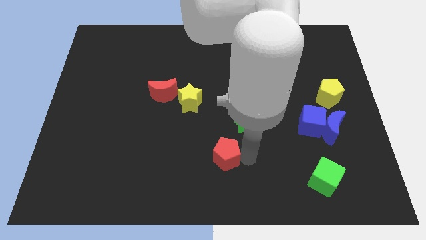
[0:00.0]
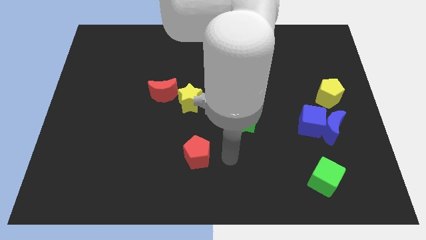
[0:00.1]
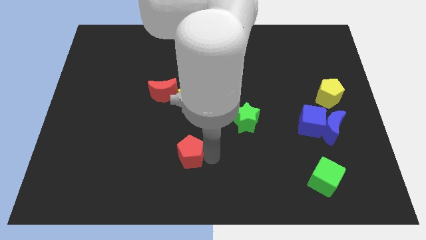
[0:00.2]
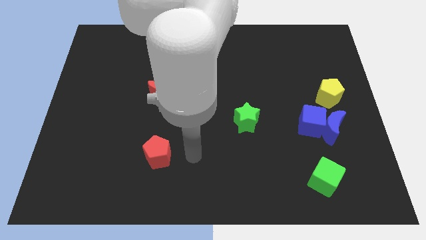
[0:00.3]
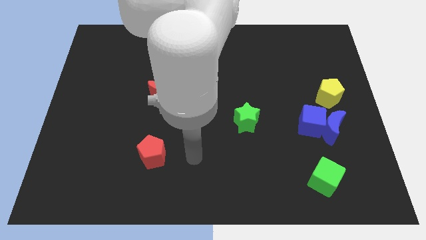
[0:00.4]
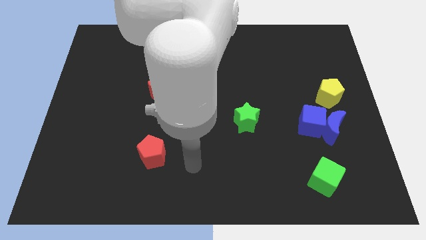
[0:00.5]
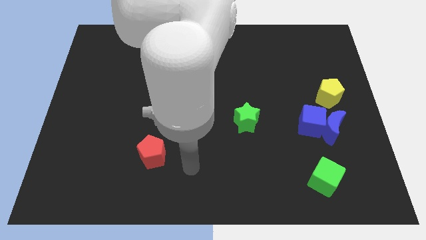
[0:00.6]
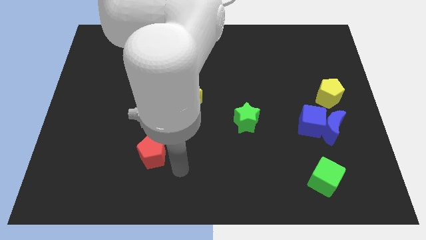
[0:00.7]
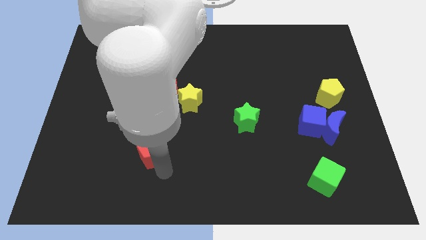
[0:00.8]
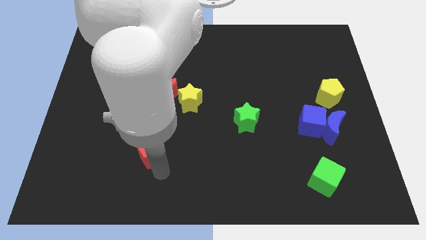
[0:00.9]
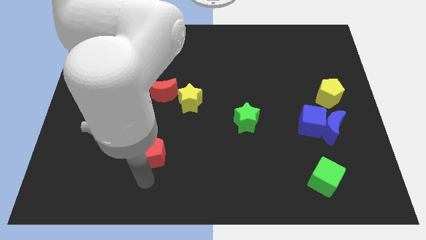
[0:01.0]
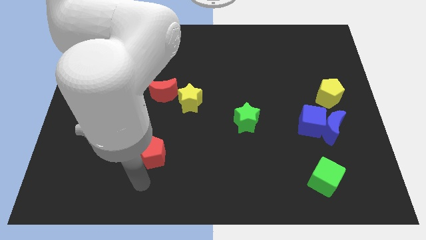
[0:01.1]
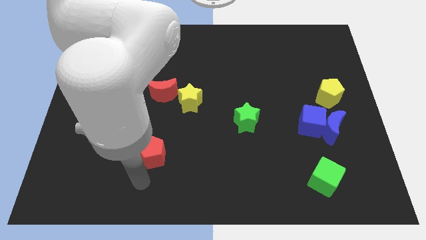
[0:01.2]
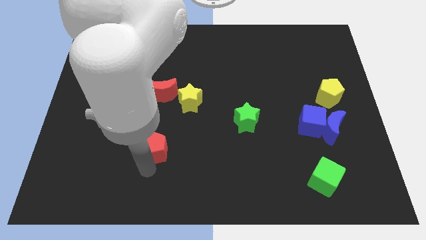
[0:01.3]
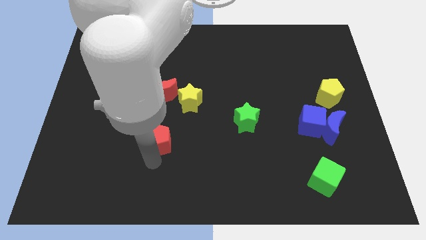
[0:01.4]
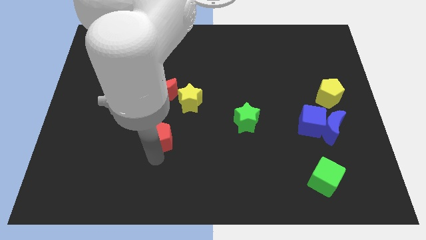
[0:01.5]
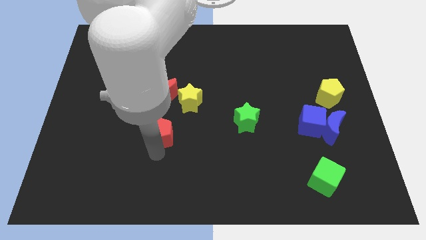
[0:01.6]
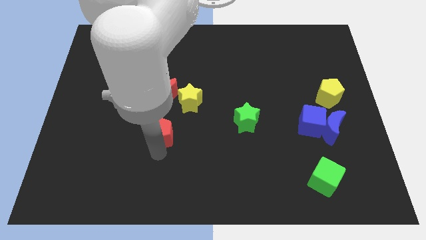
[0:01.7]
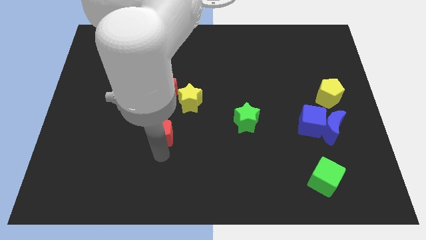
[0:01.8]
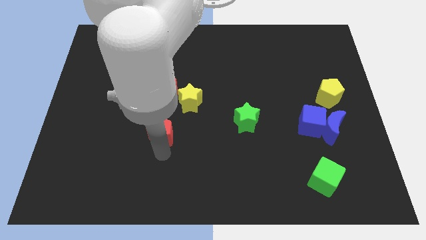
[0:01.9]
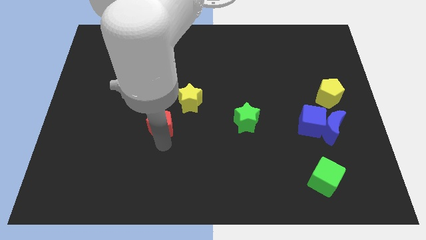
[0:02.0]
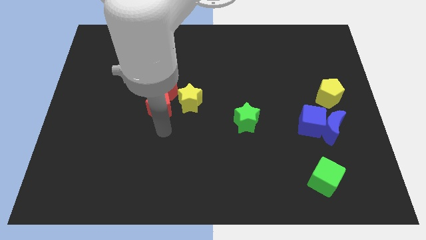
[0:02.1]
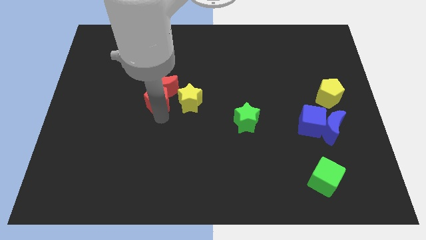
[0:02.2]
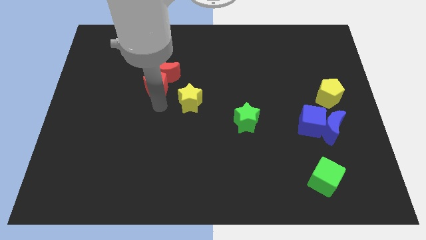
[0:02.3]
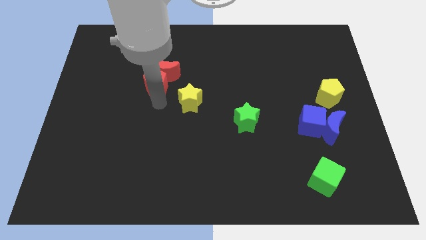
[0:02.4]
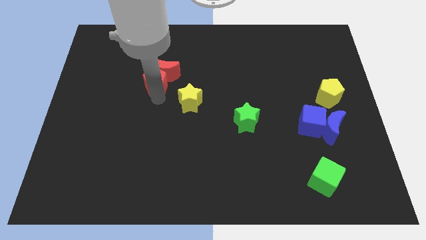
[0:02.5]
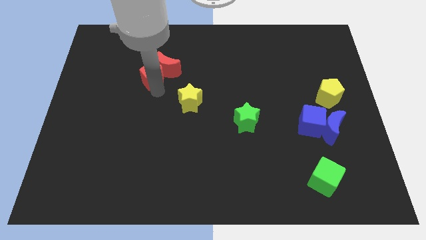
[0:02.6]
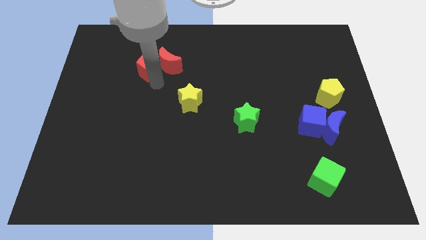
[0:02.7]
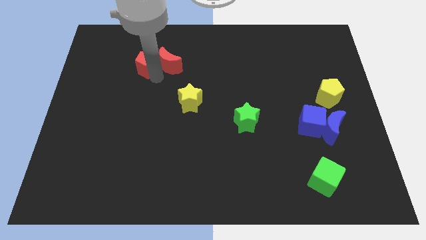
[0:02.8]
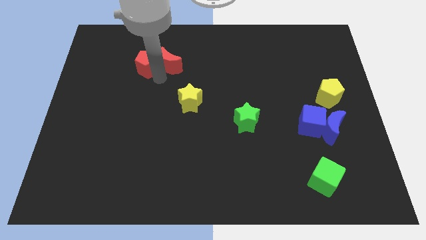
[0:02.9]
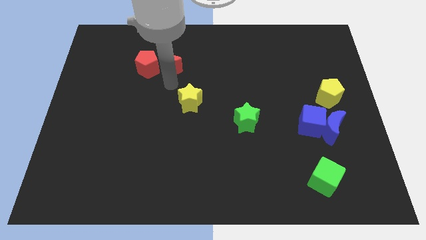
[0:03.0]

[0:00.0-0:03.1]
push the red crescent along the red pentagon towards the top of the board

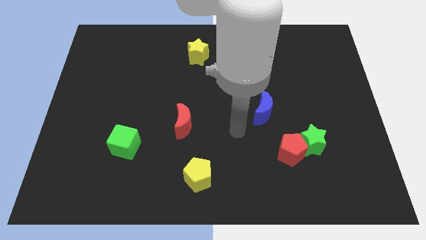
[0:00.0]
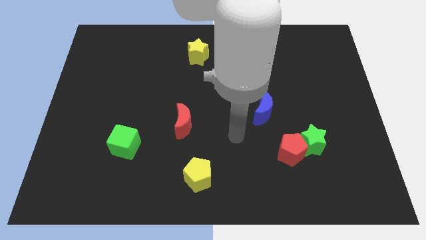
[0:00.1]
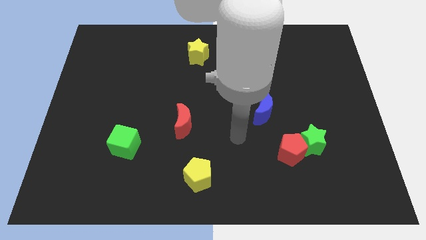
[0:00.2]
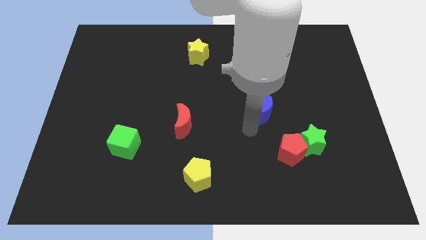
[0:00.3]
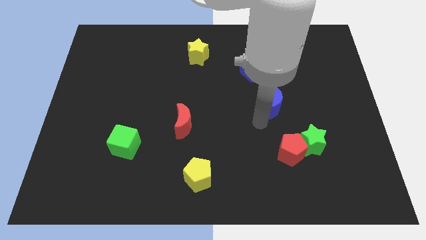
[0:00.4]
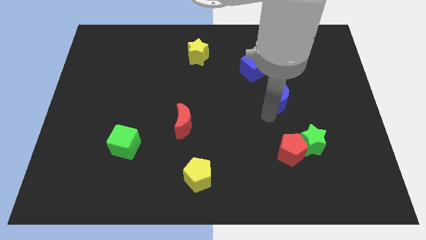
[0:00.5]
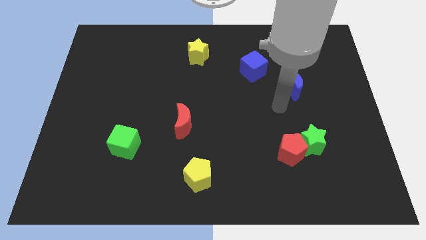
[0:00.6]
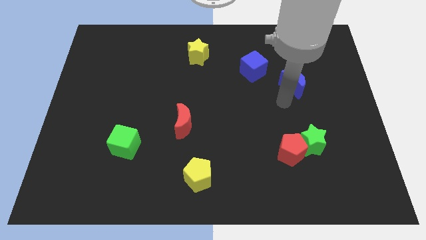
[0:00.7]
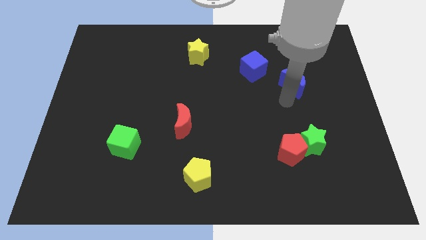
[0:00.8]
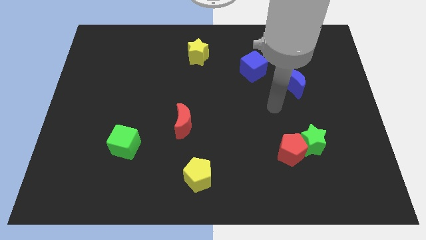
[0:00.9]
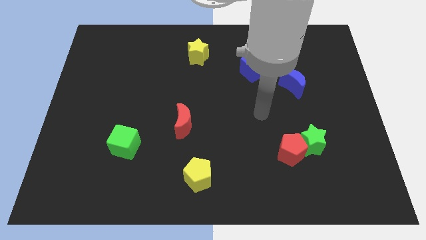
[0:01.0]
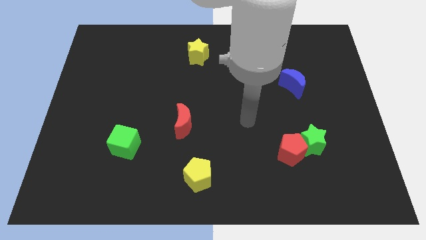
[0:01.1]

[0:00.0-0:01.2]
place the blue moon right to the green star

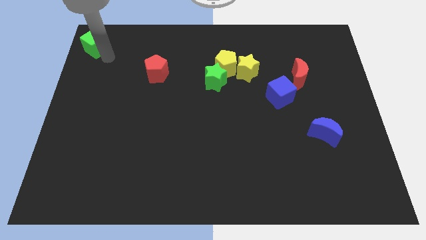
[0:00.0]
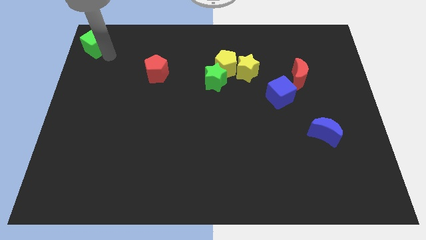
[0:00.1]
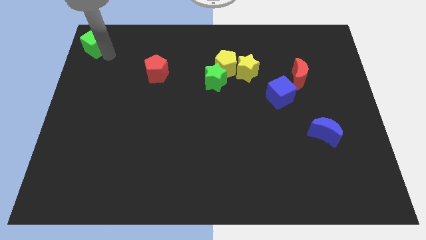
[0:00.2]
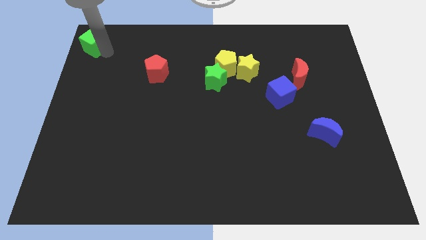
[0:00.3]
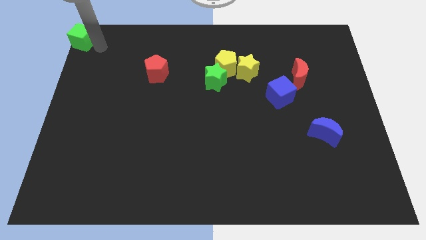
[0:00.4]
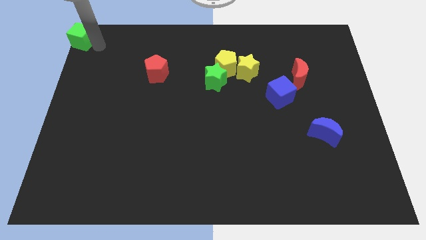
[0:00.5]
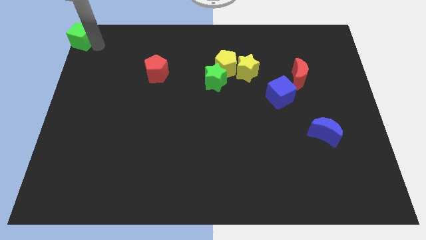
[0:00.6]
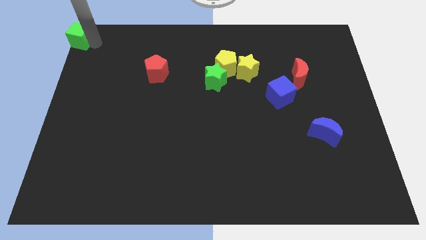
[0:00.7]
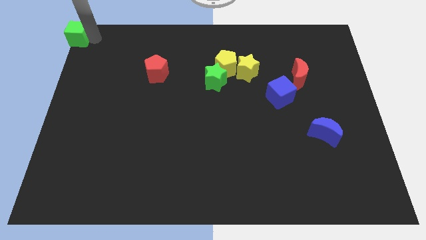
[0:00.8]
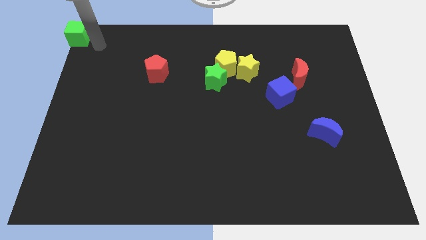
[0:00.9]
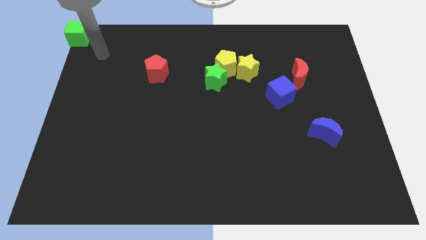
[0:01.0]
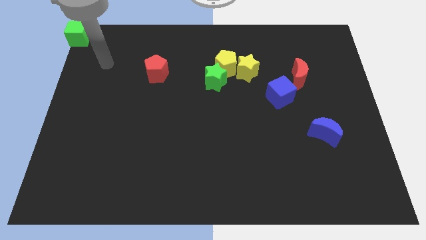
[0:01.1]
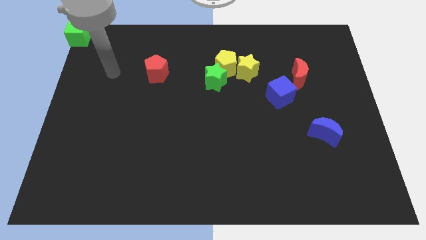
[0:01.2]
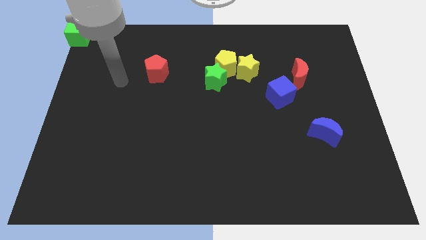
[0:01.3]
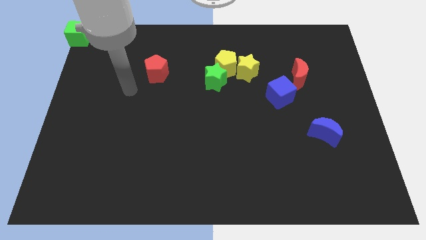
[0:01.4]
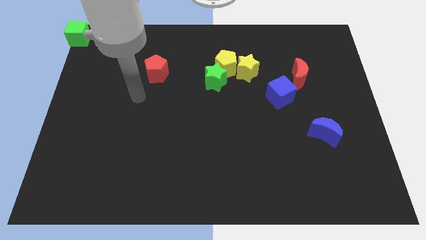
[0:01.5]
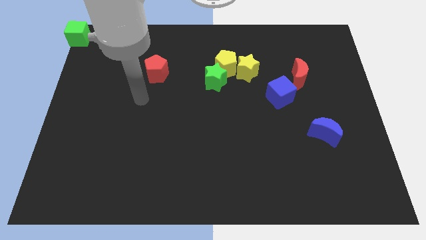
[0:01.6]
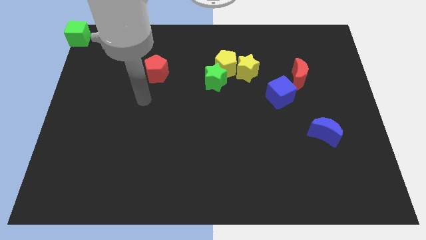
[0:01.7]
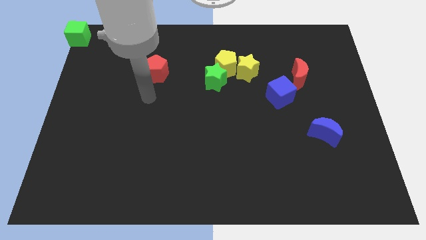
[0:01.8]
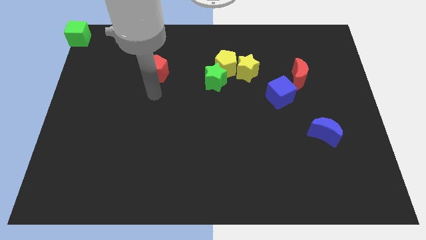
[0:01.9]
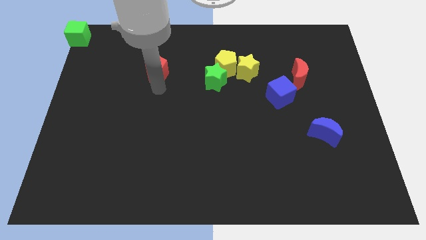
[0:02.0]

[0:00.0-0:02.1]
move your arm to the bottom of the red pentagon

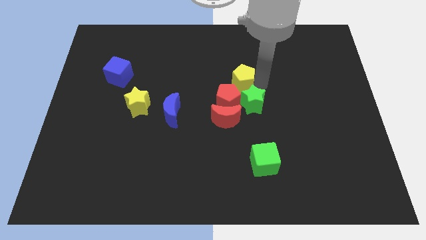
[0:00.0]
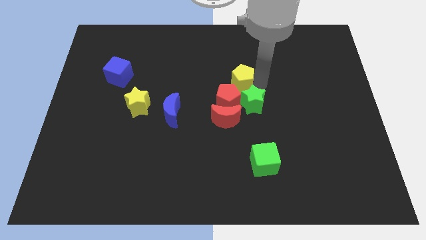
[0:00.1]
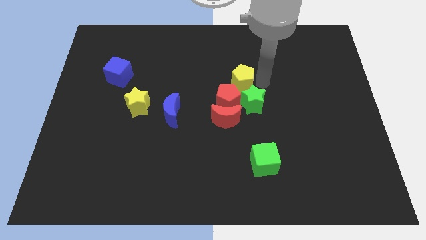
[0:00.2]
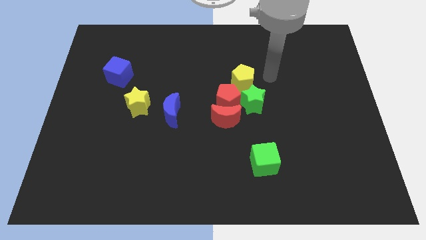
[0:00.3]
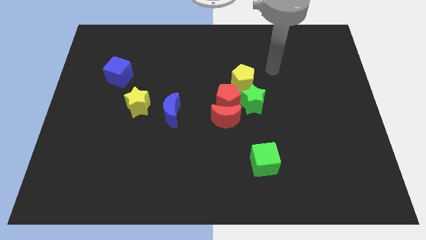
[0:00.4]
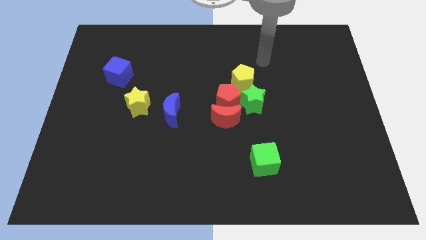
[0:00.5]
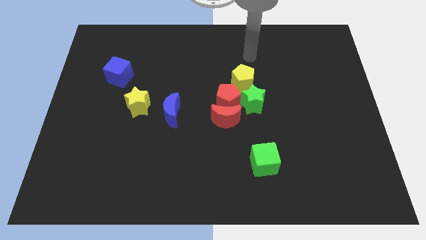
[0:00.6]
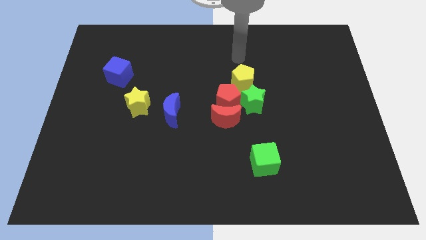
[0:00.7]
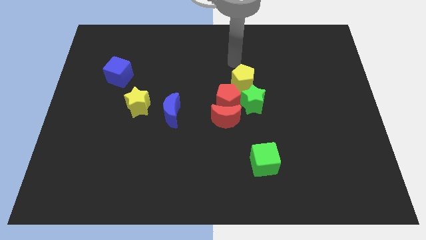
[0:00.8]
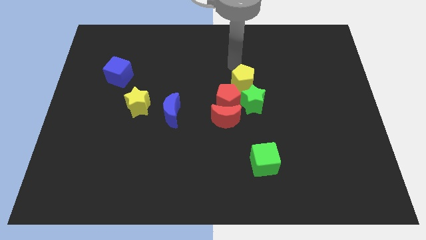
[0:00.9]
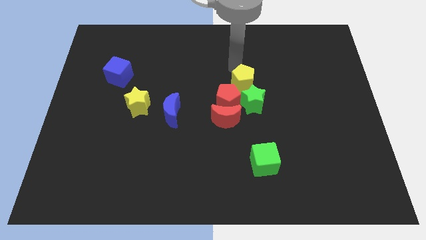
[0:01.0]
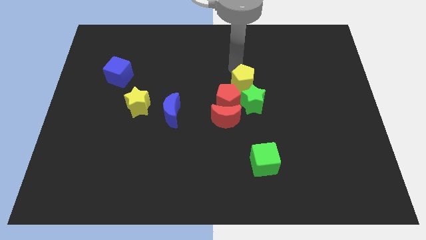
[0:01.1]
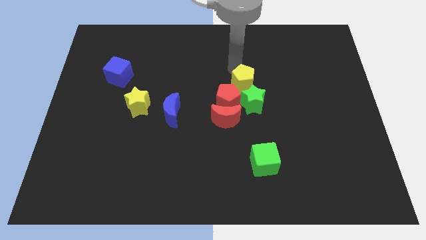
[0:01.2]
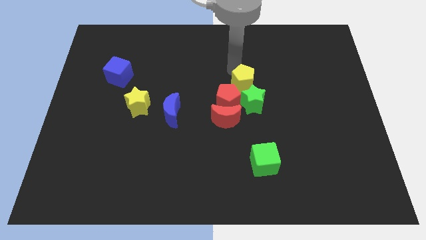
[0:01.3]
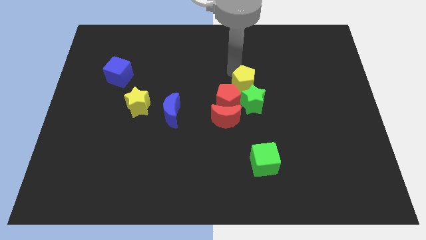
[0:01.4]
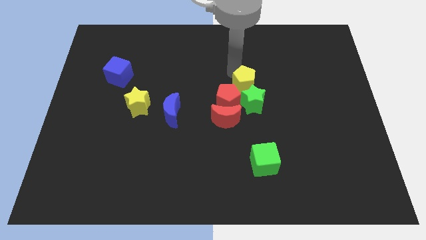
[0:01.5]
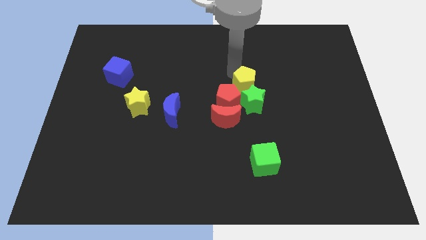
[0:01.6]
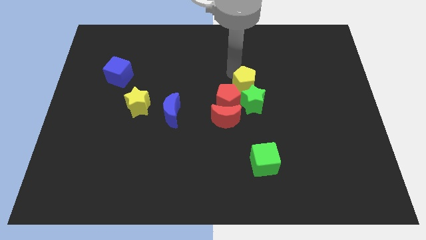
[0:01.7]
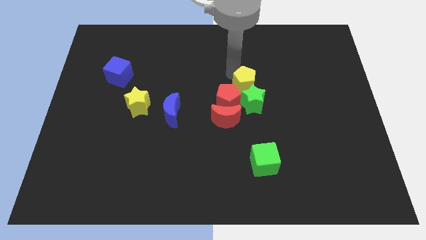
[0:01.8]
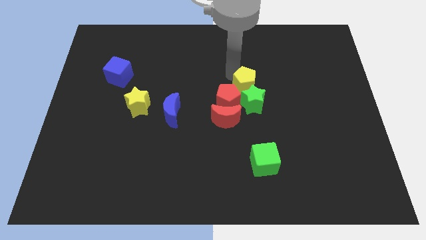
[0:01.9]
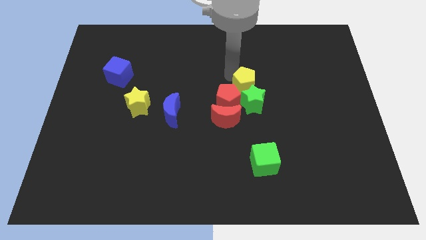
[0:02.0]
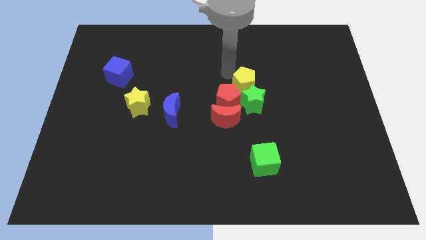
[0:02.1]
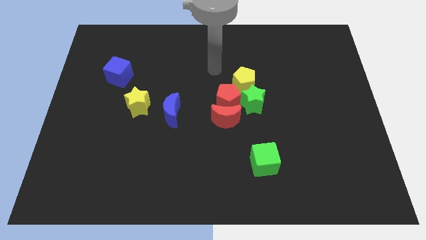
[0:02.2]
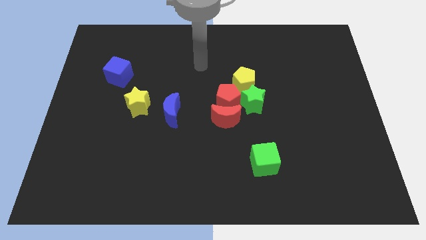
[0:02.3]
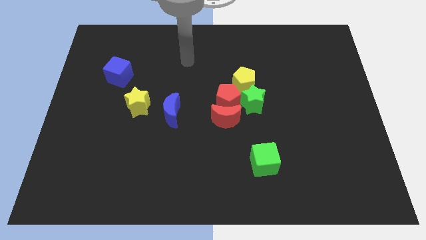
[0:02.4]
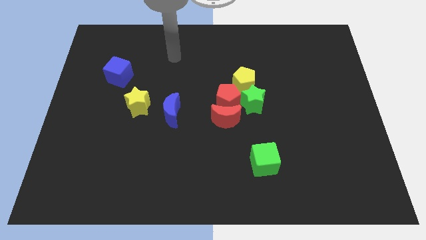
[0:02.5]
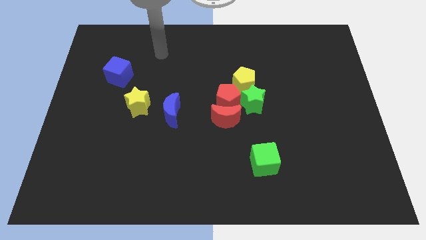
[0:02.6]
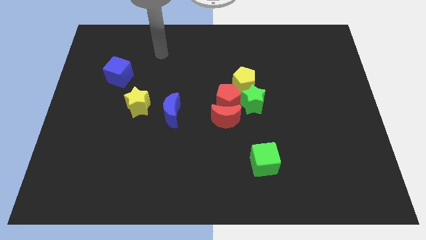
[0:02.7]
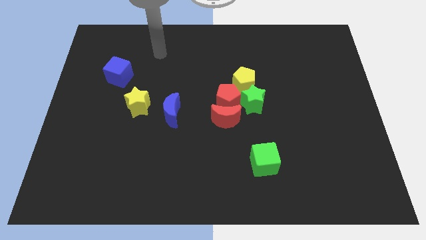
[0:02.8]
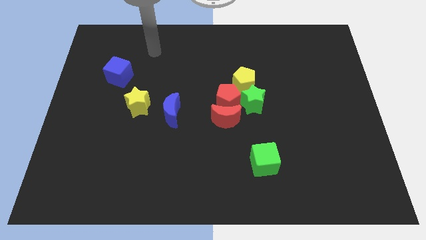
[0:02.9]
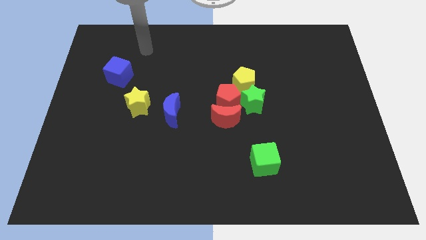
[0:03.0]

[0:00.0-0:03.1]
adjust the yellow pentagon to the top right of the red pentagon and go away
